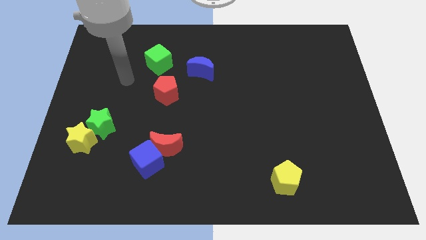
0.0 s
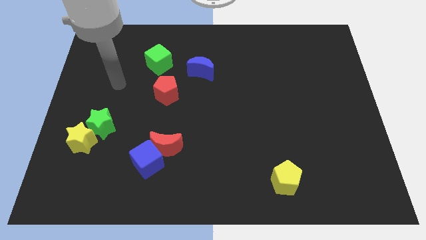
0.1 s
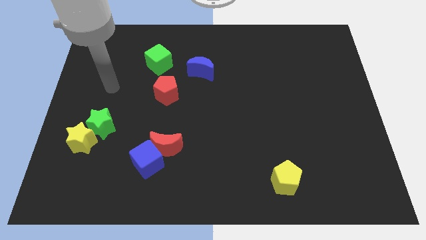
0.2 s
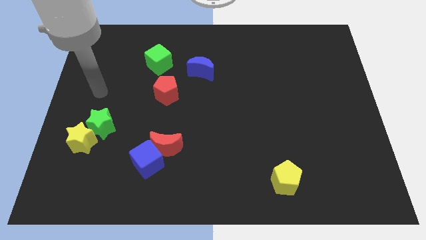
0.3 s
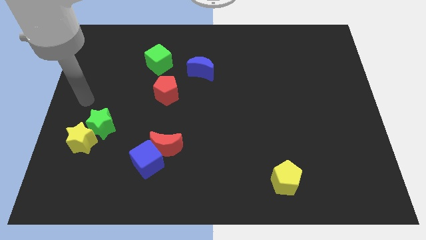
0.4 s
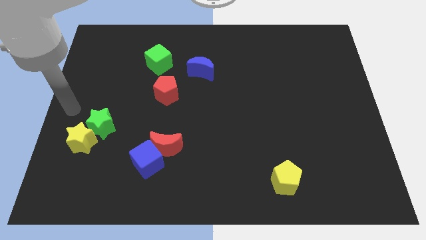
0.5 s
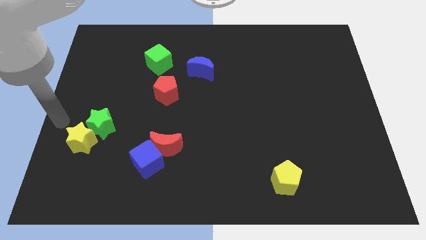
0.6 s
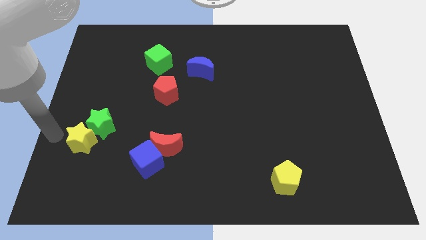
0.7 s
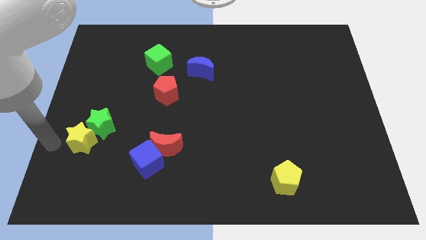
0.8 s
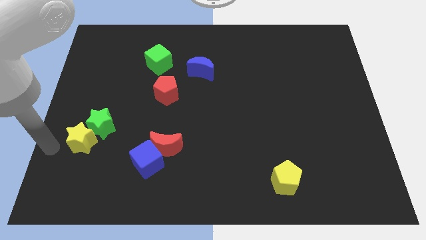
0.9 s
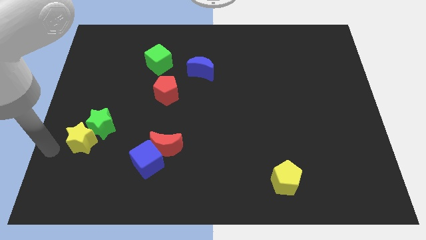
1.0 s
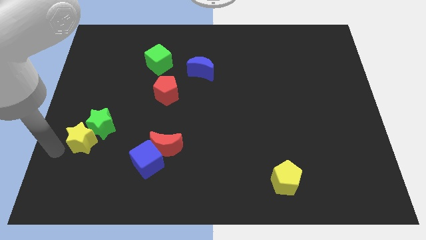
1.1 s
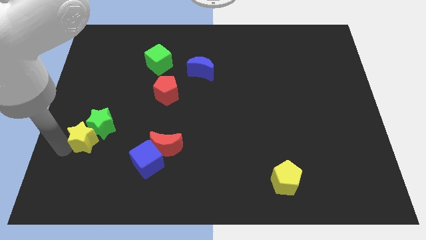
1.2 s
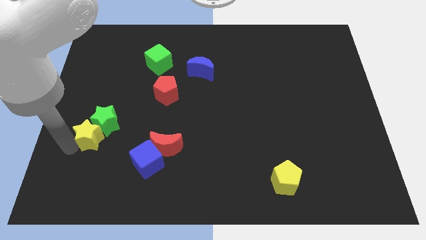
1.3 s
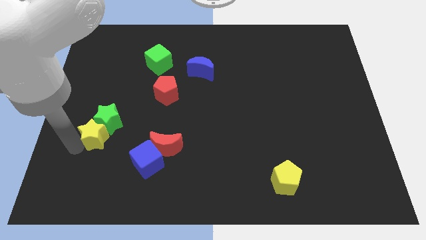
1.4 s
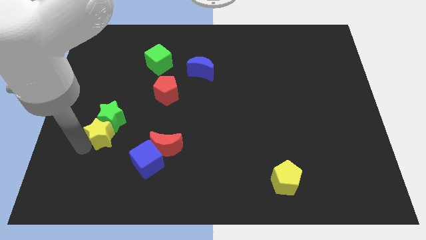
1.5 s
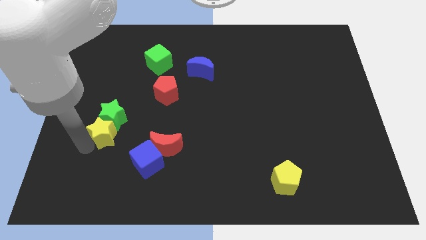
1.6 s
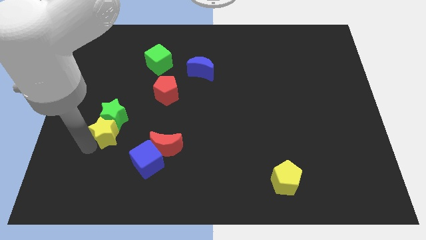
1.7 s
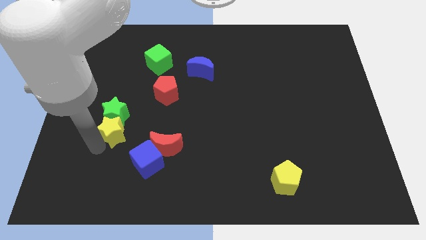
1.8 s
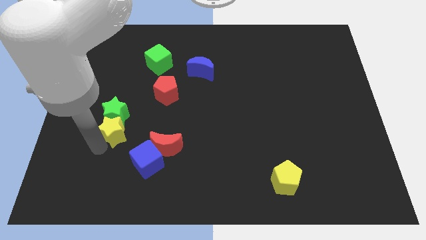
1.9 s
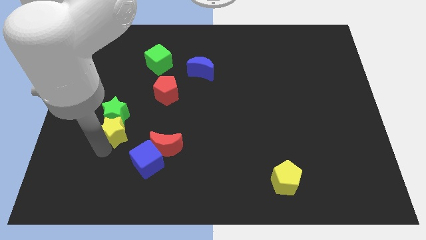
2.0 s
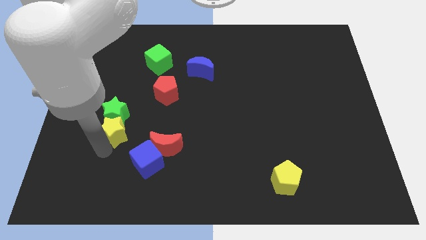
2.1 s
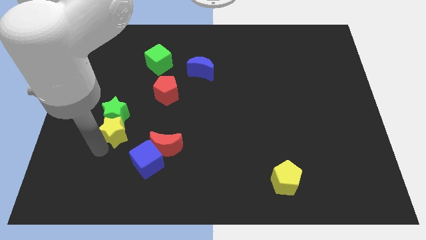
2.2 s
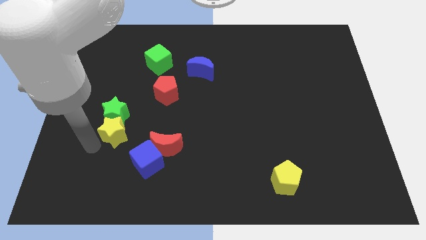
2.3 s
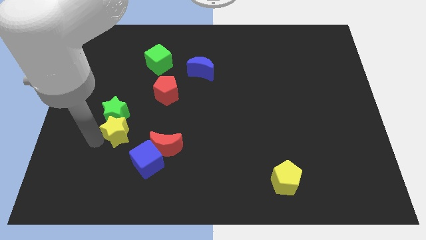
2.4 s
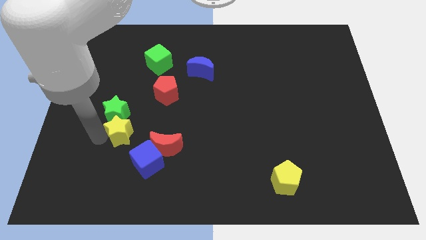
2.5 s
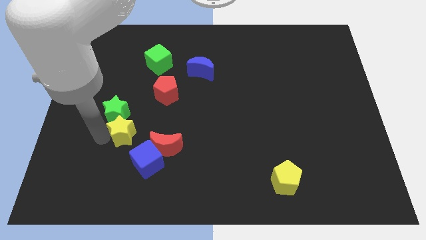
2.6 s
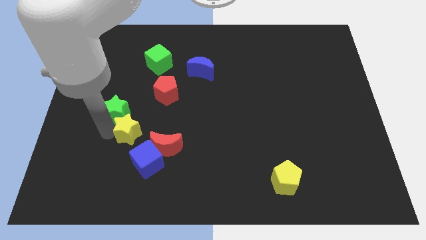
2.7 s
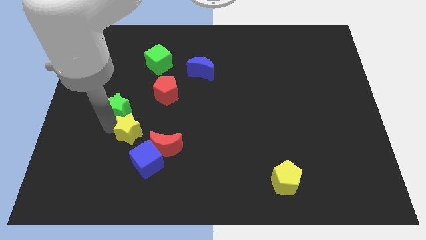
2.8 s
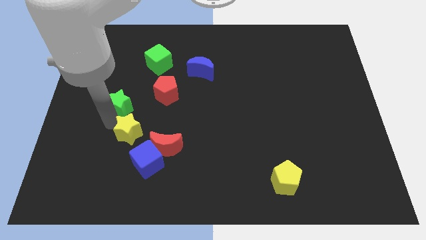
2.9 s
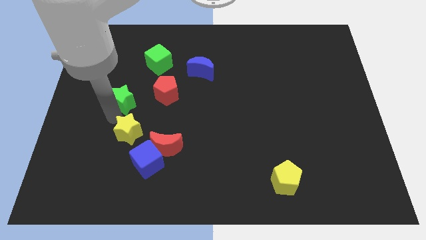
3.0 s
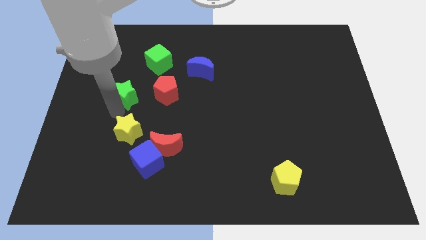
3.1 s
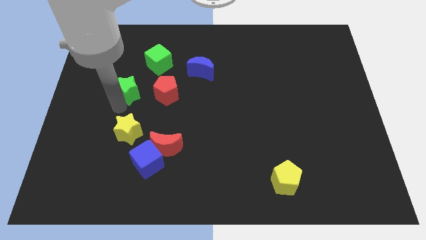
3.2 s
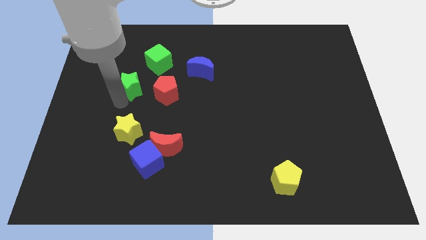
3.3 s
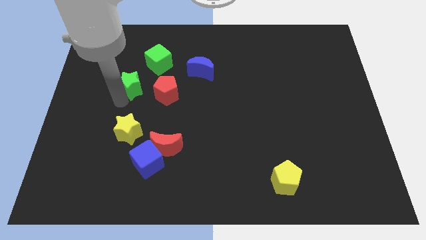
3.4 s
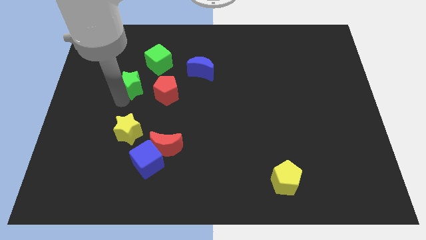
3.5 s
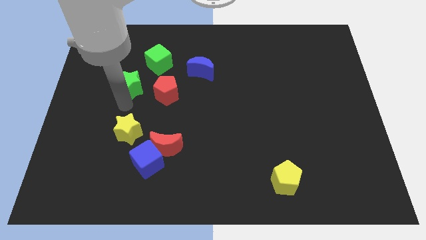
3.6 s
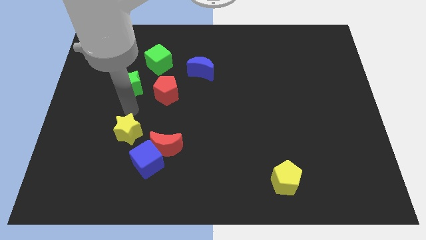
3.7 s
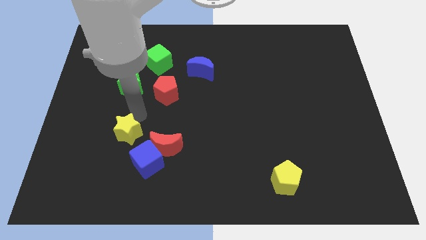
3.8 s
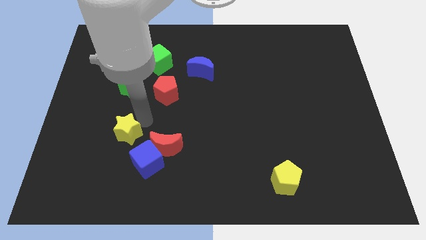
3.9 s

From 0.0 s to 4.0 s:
separate the yellow star and green star from each other

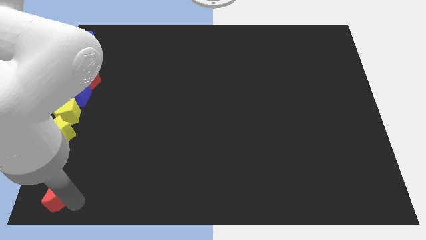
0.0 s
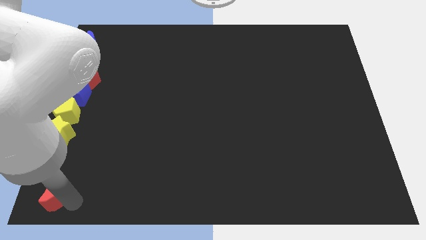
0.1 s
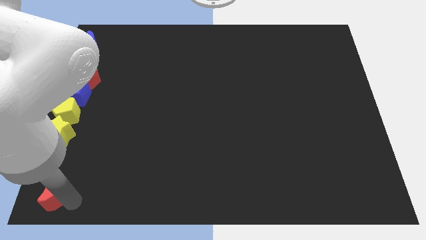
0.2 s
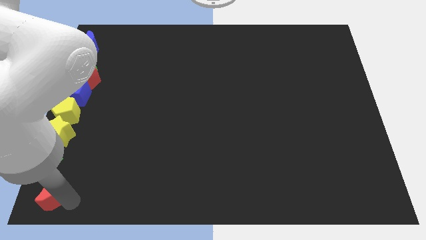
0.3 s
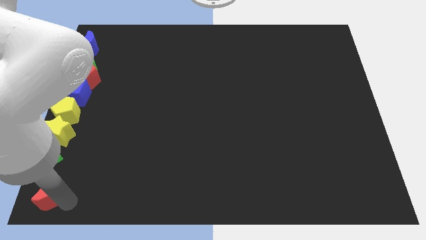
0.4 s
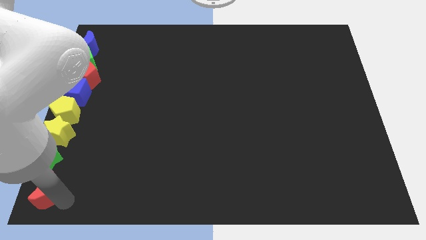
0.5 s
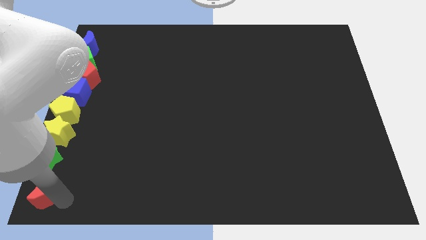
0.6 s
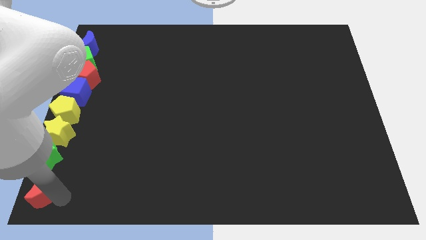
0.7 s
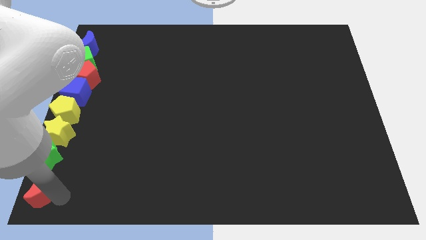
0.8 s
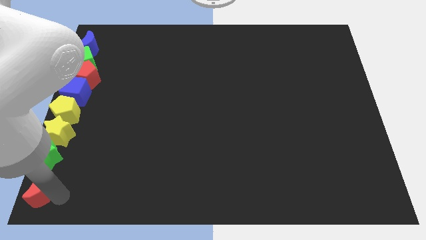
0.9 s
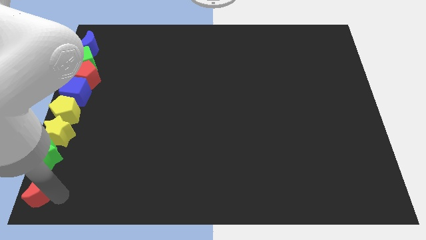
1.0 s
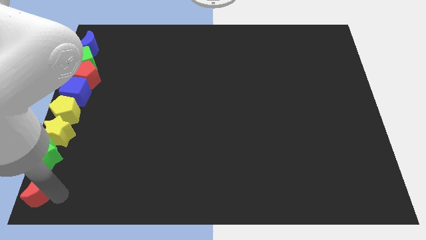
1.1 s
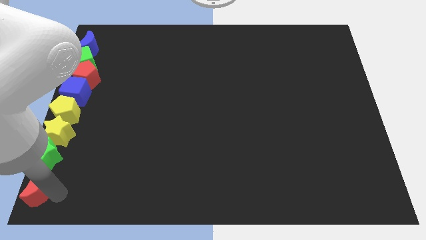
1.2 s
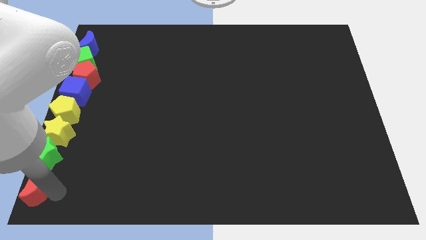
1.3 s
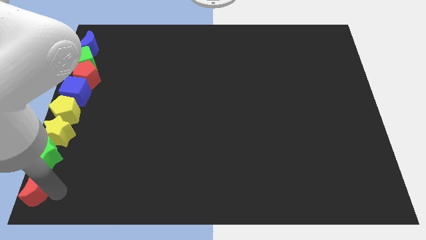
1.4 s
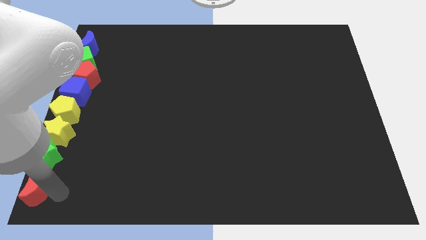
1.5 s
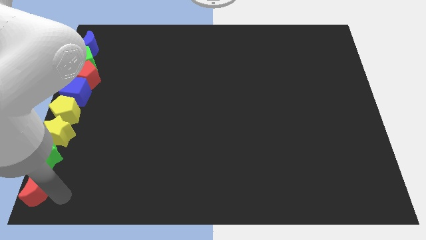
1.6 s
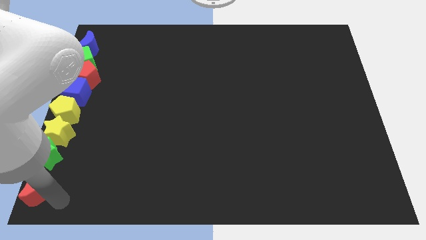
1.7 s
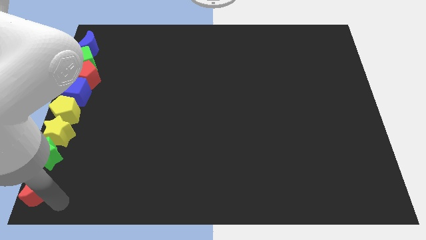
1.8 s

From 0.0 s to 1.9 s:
slide the red crescent slightly to the left

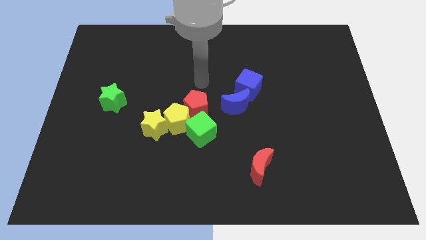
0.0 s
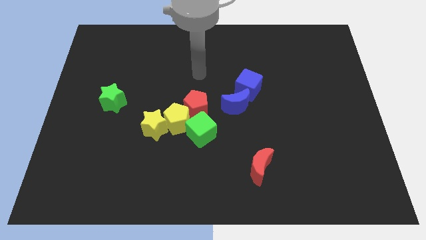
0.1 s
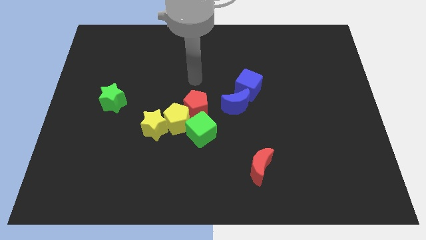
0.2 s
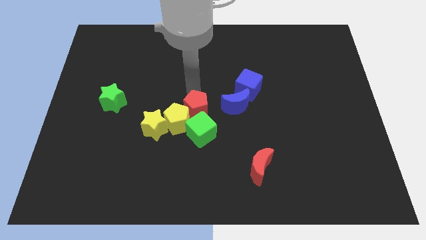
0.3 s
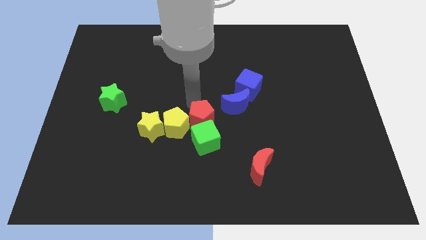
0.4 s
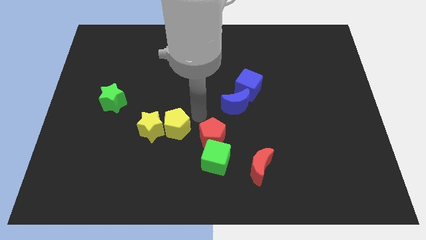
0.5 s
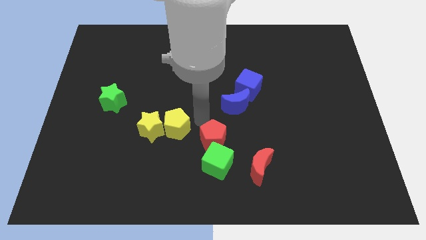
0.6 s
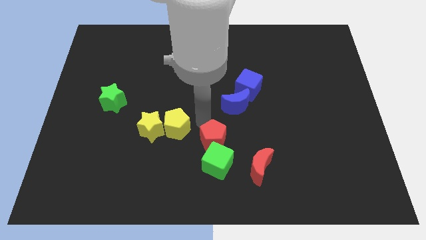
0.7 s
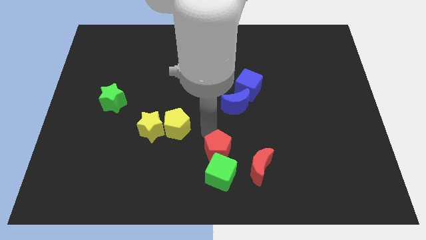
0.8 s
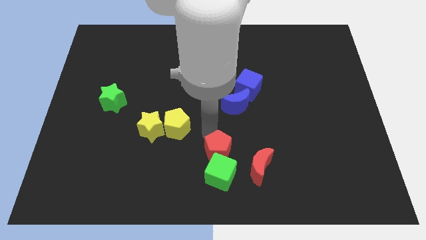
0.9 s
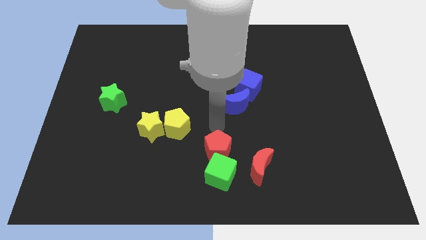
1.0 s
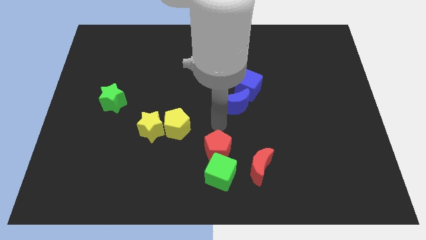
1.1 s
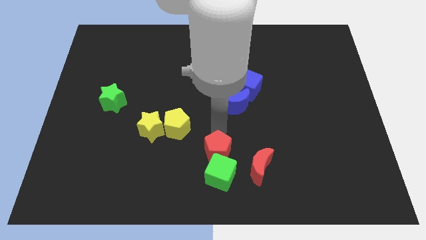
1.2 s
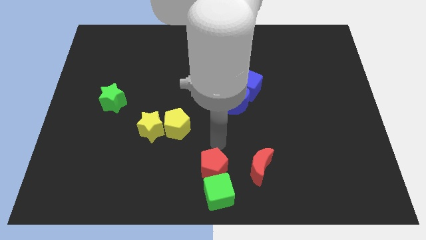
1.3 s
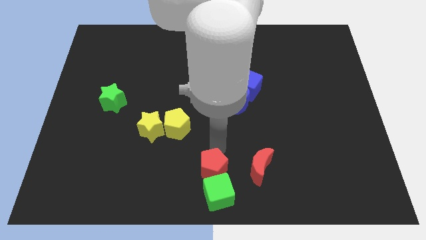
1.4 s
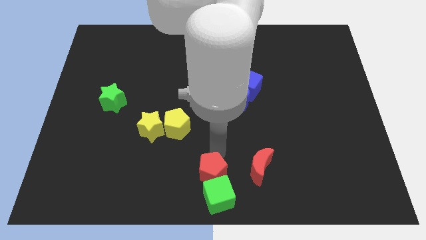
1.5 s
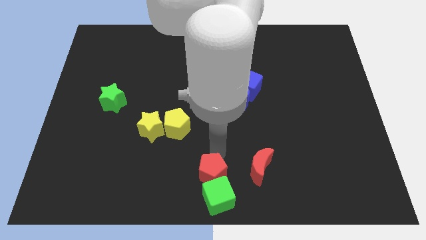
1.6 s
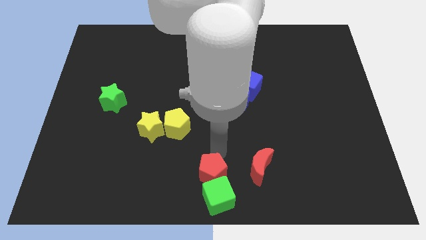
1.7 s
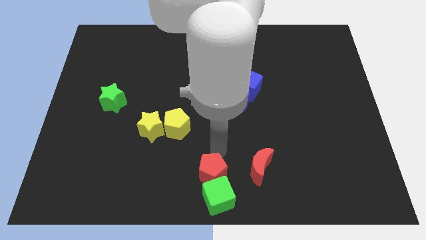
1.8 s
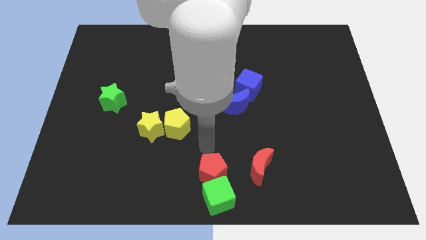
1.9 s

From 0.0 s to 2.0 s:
move red pentagon green cube to the bottom center

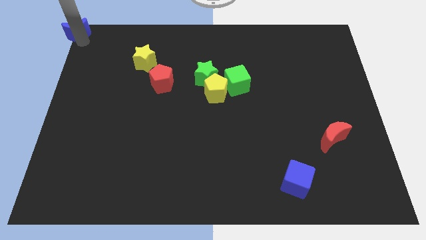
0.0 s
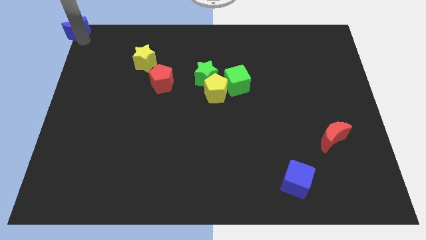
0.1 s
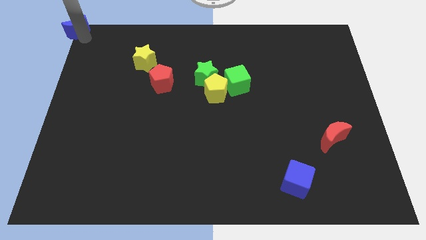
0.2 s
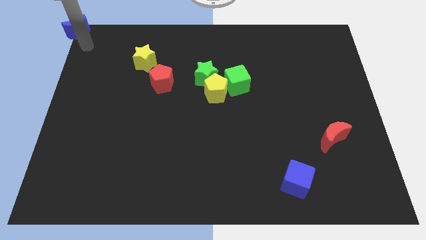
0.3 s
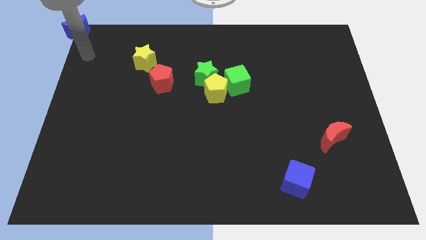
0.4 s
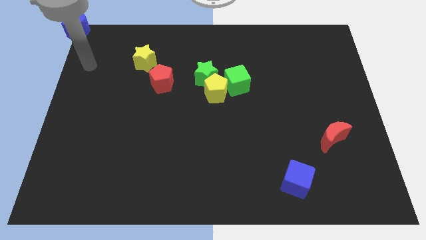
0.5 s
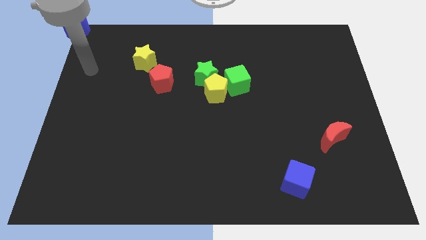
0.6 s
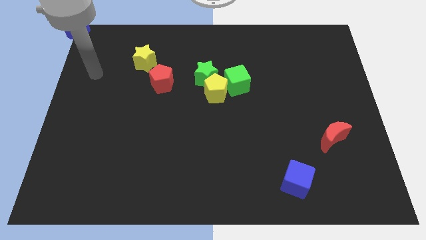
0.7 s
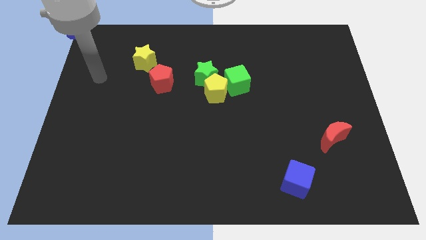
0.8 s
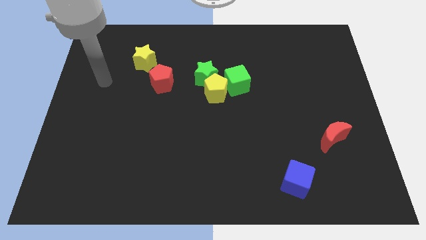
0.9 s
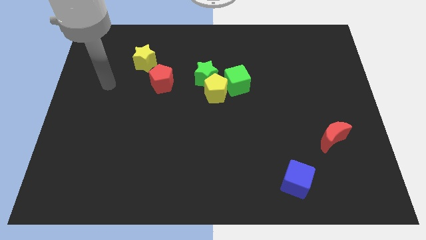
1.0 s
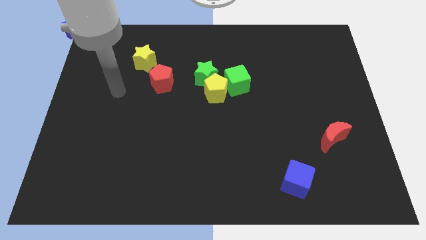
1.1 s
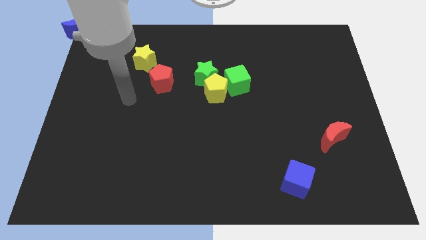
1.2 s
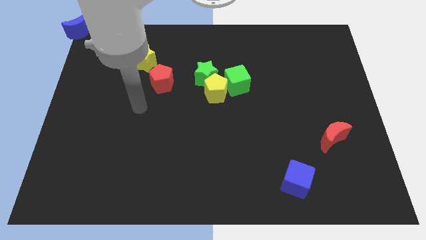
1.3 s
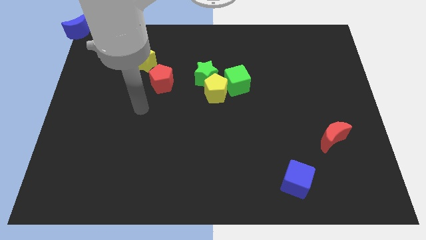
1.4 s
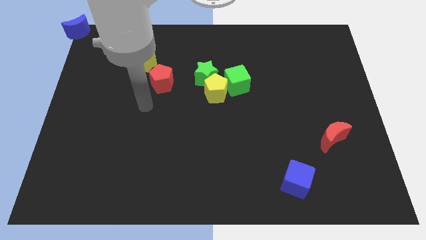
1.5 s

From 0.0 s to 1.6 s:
move the arm away from the blue moon
